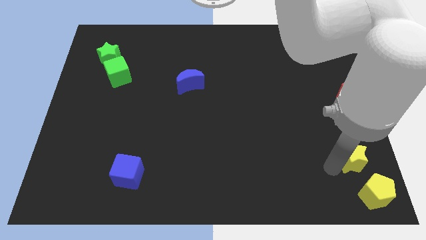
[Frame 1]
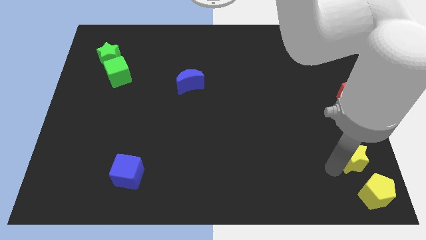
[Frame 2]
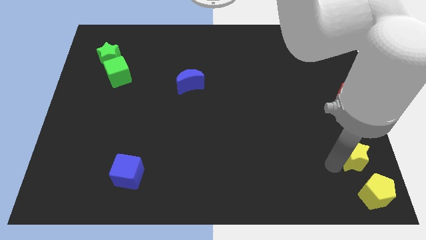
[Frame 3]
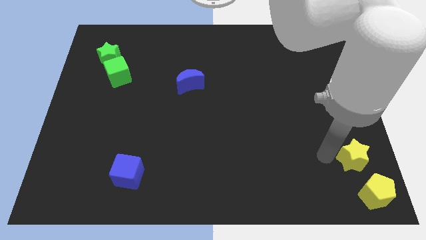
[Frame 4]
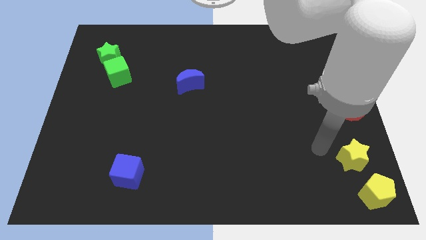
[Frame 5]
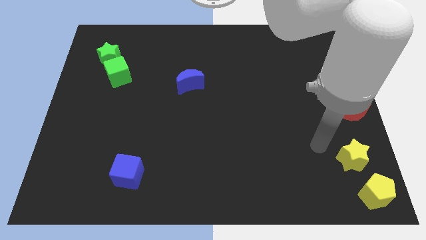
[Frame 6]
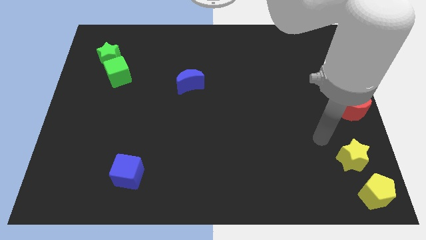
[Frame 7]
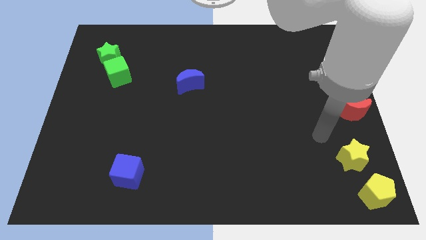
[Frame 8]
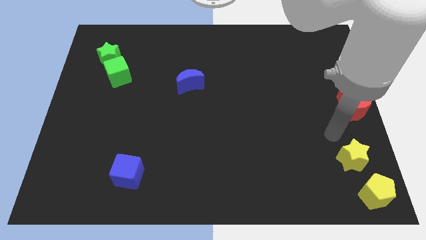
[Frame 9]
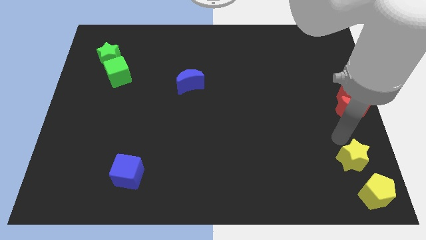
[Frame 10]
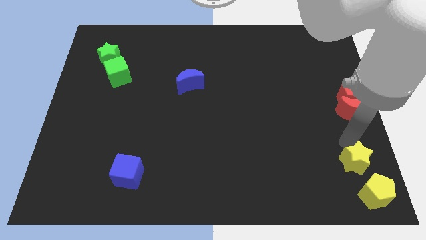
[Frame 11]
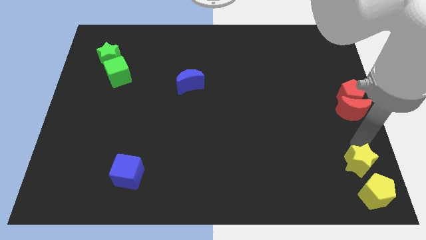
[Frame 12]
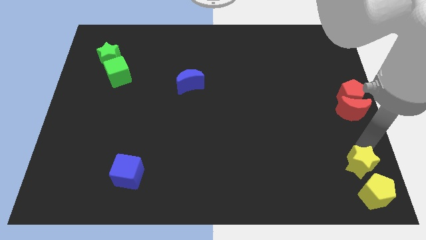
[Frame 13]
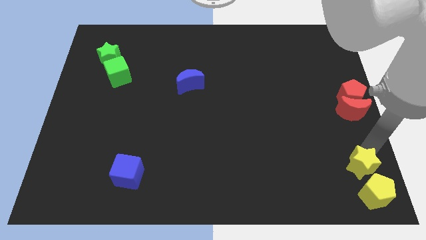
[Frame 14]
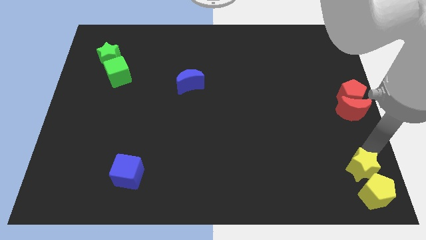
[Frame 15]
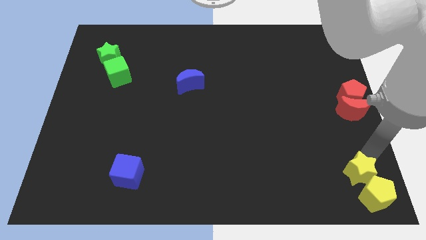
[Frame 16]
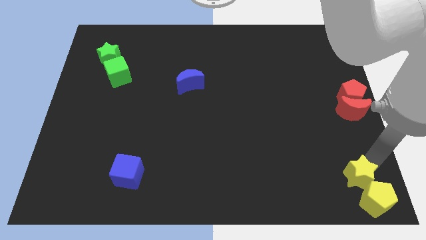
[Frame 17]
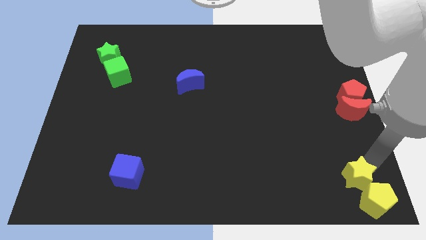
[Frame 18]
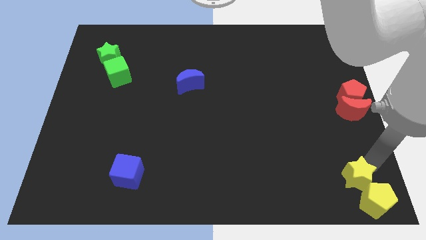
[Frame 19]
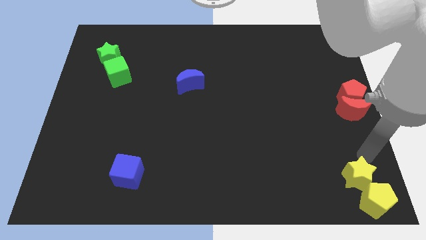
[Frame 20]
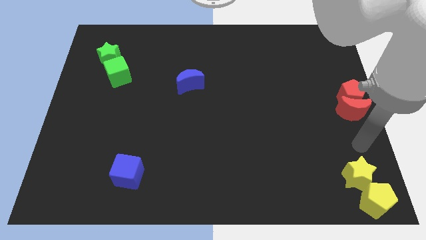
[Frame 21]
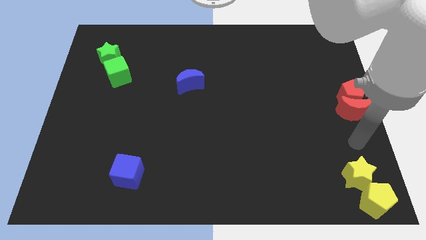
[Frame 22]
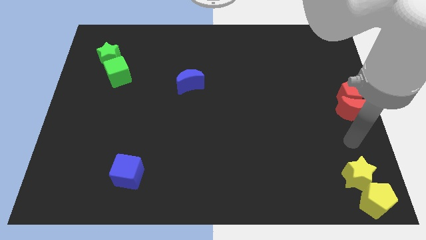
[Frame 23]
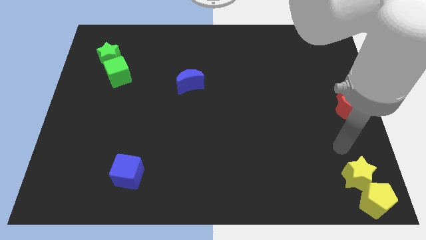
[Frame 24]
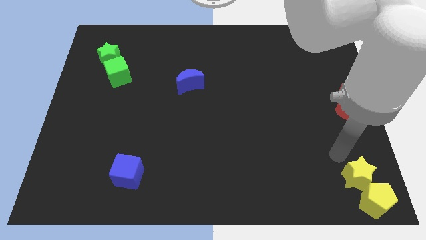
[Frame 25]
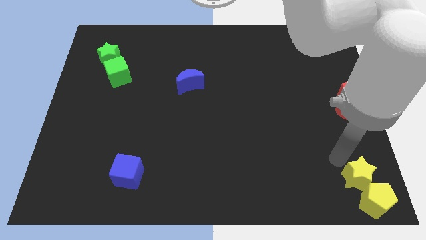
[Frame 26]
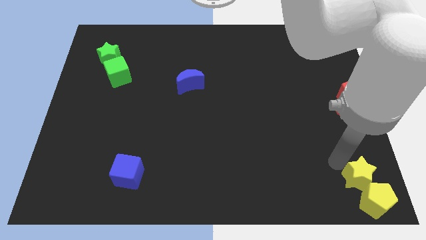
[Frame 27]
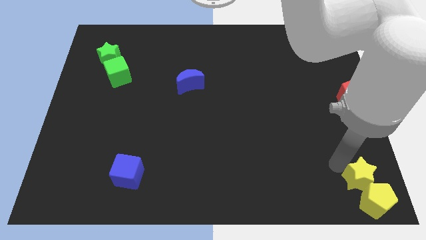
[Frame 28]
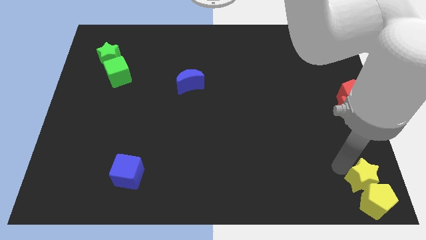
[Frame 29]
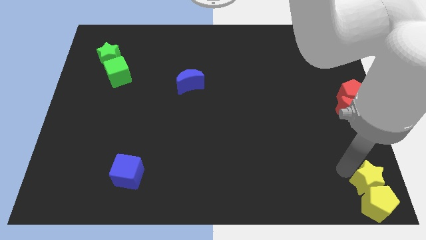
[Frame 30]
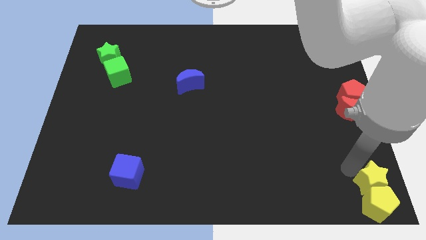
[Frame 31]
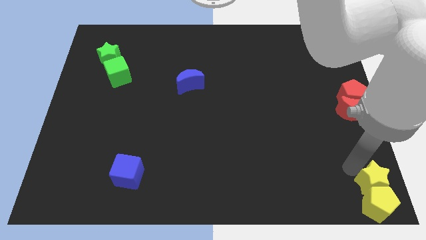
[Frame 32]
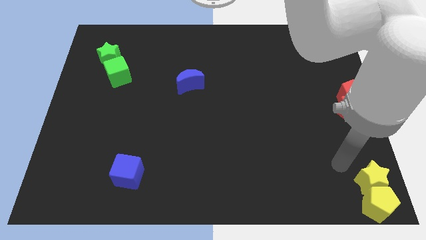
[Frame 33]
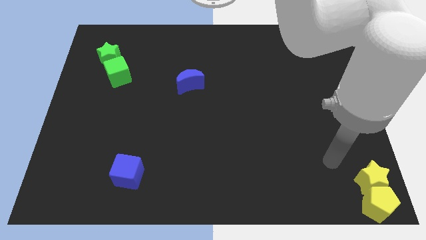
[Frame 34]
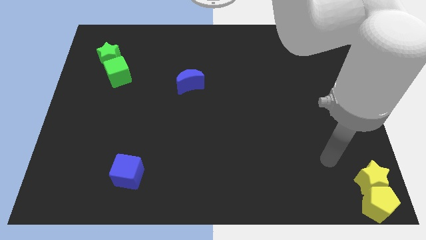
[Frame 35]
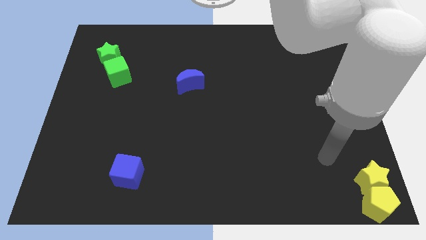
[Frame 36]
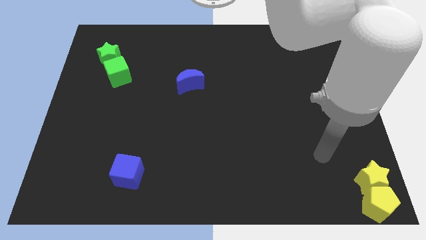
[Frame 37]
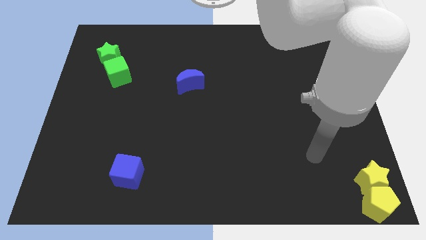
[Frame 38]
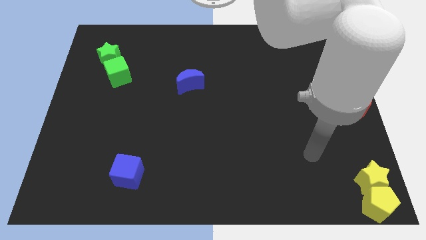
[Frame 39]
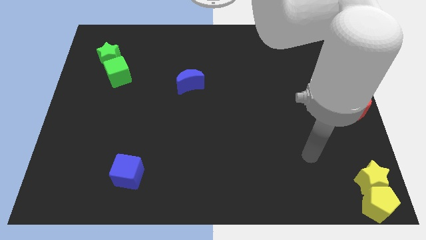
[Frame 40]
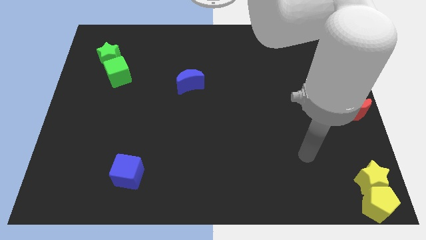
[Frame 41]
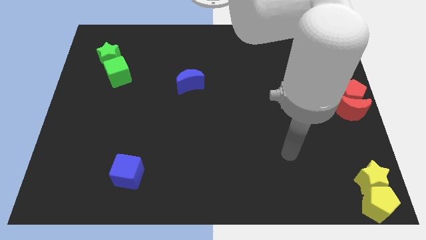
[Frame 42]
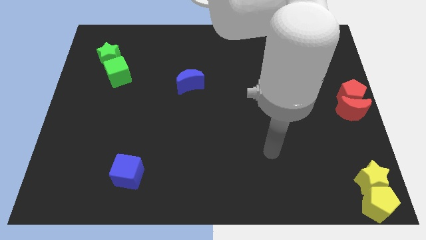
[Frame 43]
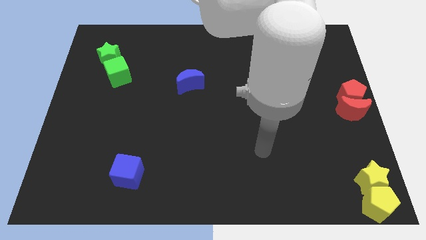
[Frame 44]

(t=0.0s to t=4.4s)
place the yellow star above to the yellow pentagon at the bottom right corner

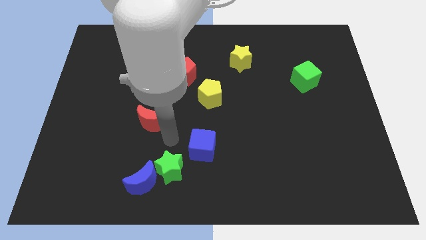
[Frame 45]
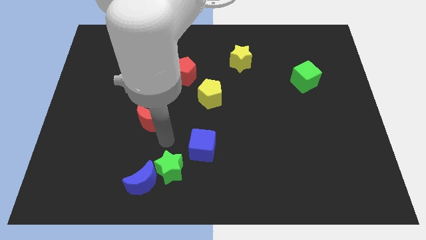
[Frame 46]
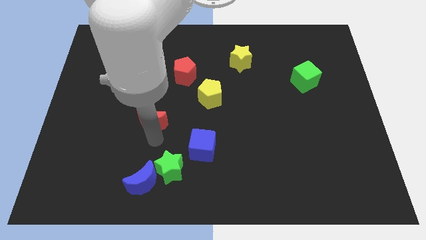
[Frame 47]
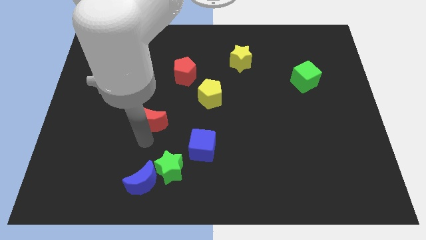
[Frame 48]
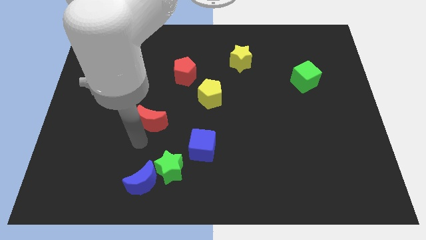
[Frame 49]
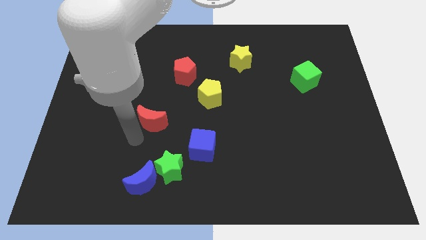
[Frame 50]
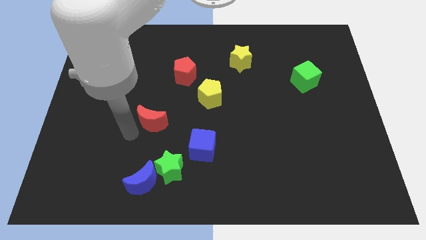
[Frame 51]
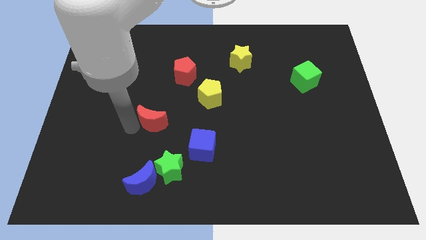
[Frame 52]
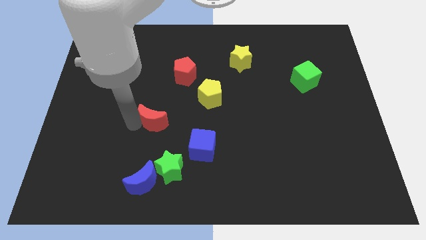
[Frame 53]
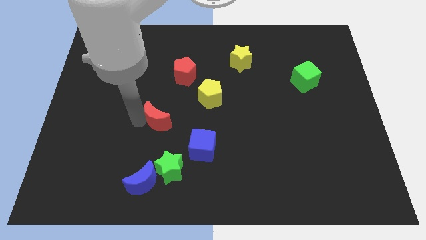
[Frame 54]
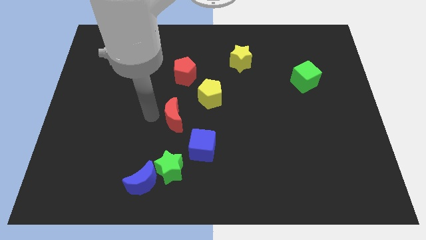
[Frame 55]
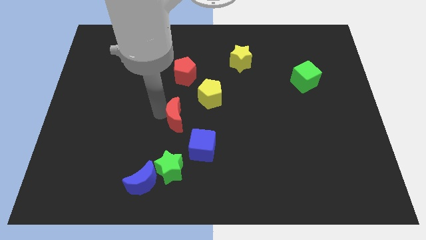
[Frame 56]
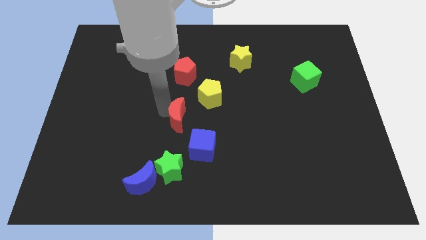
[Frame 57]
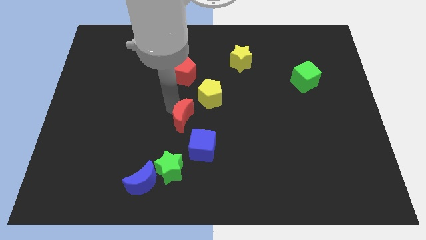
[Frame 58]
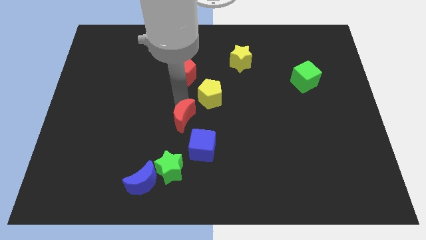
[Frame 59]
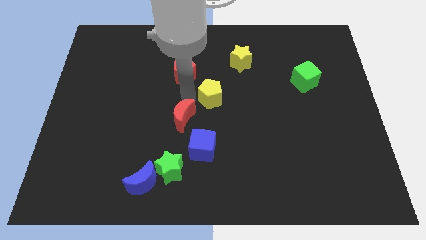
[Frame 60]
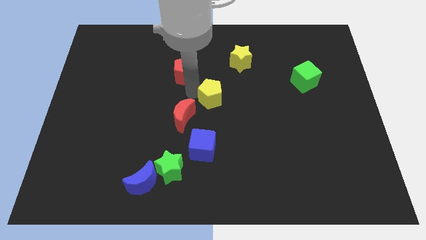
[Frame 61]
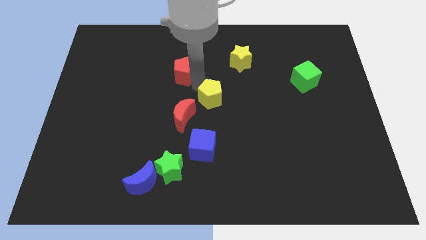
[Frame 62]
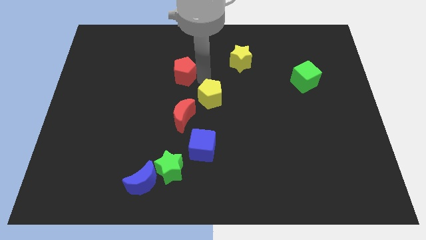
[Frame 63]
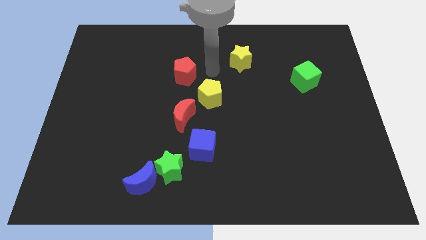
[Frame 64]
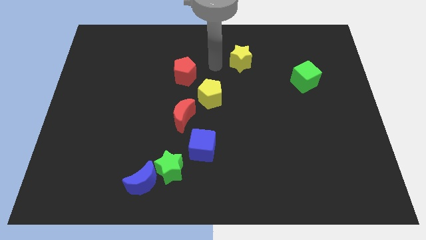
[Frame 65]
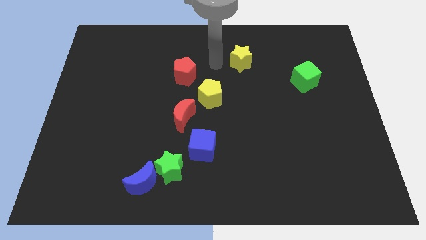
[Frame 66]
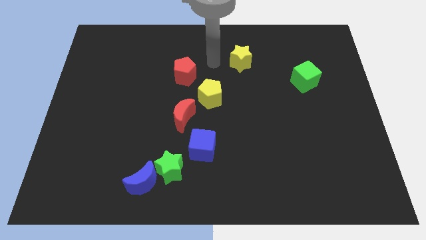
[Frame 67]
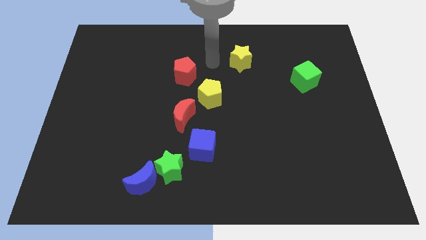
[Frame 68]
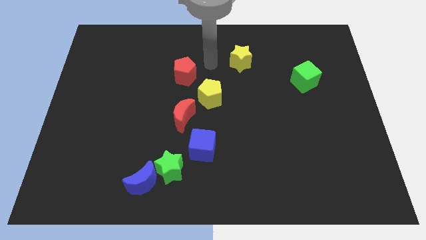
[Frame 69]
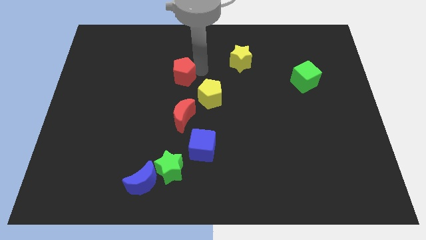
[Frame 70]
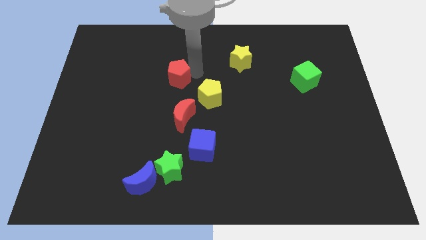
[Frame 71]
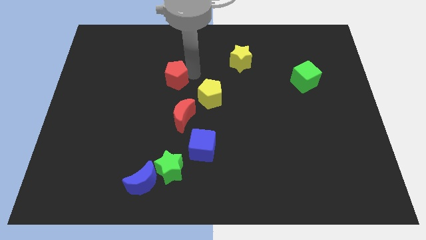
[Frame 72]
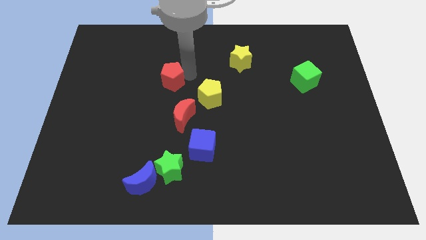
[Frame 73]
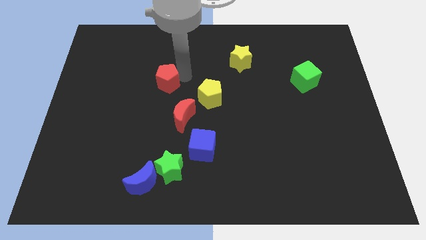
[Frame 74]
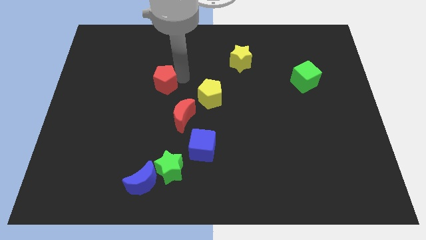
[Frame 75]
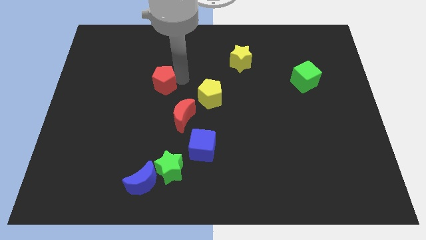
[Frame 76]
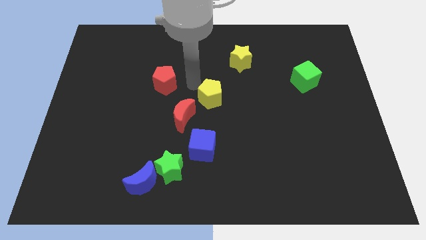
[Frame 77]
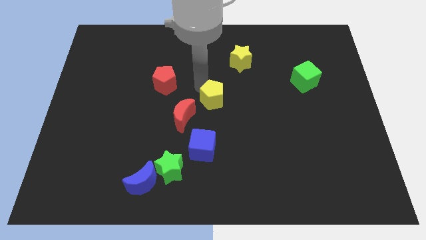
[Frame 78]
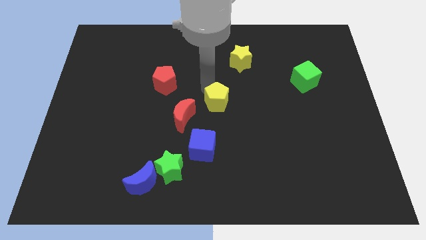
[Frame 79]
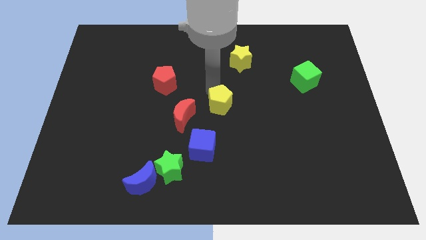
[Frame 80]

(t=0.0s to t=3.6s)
move the yellow pentagon to the centre of the board

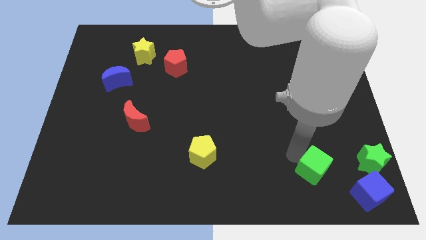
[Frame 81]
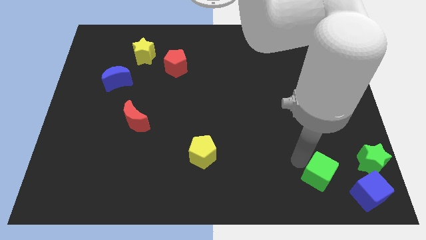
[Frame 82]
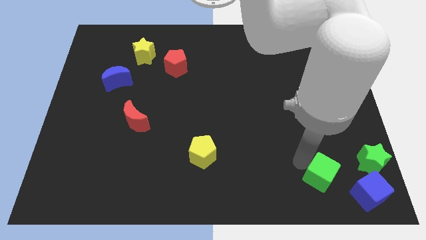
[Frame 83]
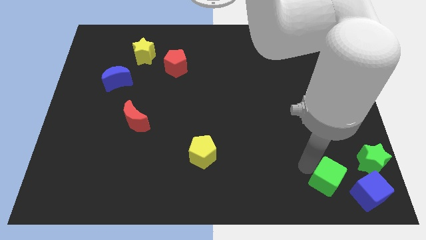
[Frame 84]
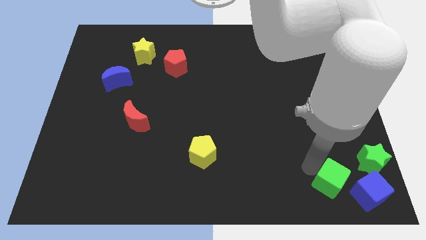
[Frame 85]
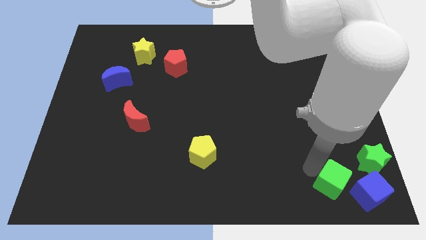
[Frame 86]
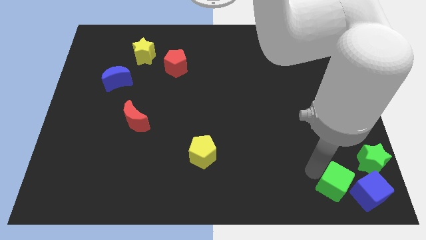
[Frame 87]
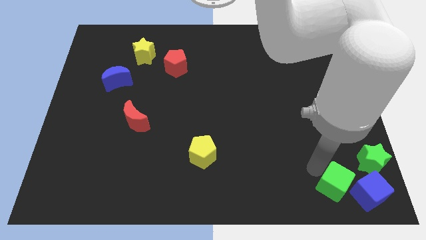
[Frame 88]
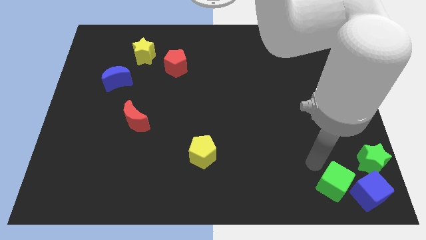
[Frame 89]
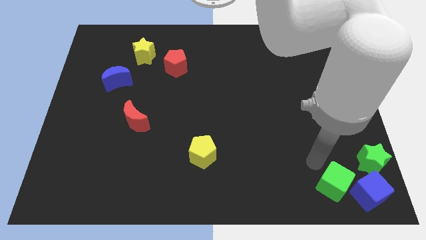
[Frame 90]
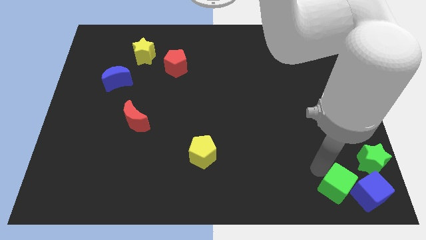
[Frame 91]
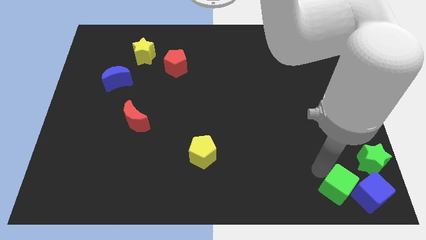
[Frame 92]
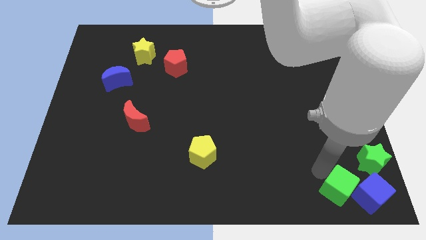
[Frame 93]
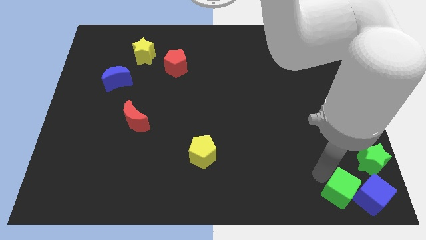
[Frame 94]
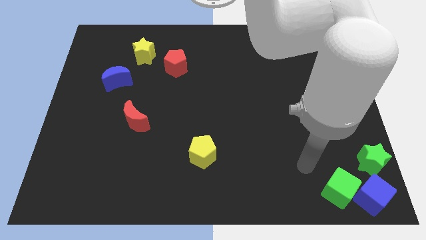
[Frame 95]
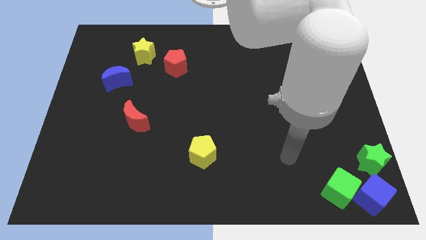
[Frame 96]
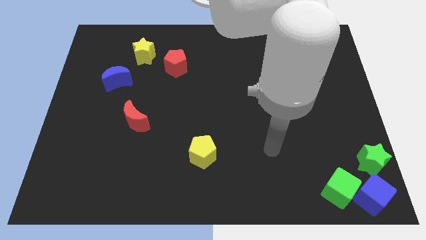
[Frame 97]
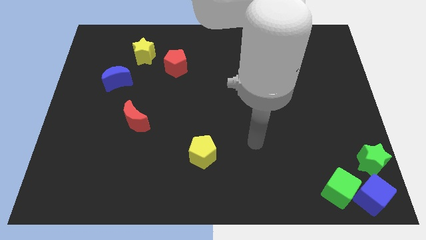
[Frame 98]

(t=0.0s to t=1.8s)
push the green cube to the left of the blue cube
